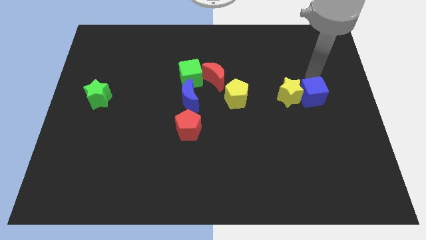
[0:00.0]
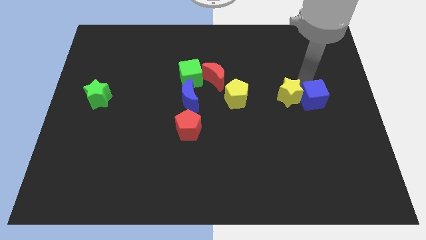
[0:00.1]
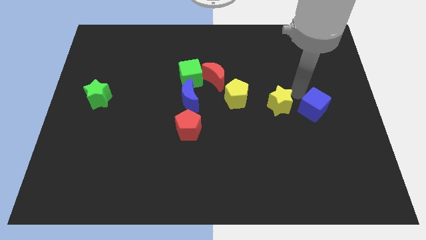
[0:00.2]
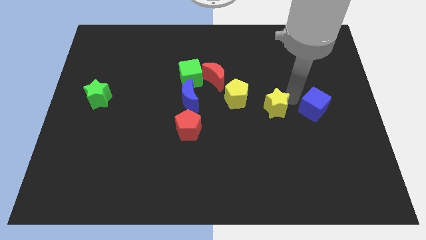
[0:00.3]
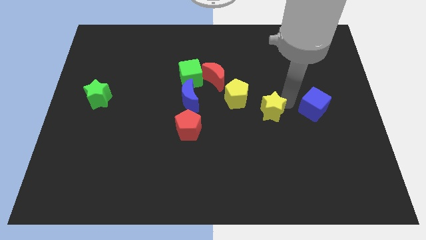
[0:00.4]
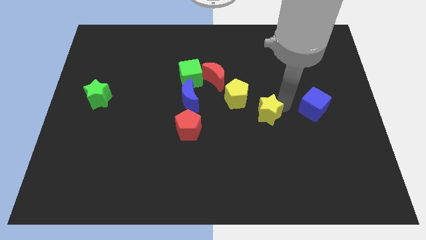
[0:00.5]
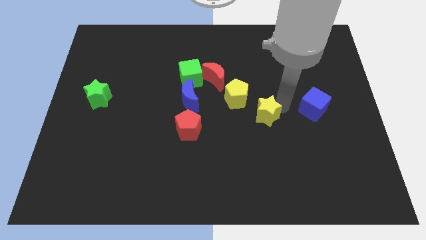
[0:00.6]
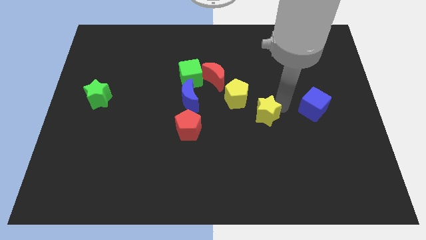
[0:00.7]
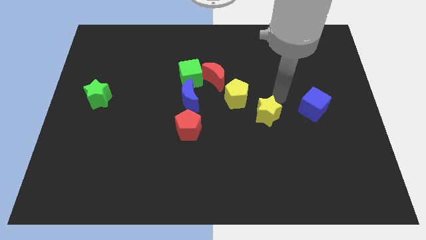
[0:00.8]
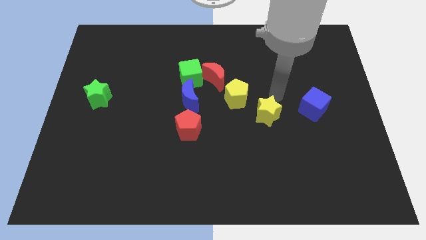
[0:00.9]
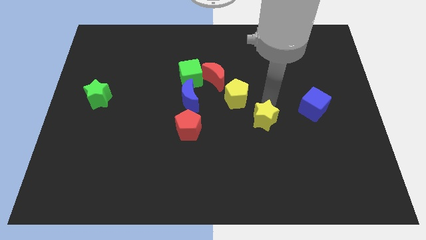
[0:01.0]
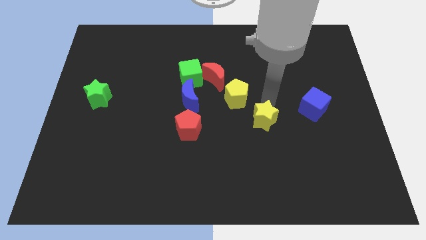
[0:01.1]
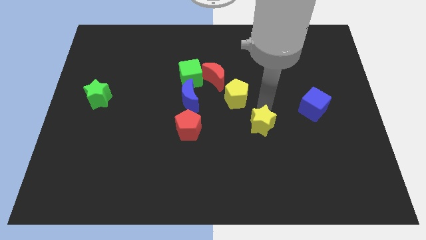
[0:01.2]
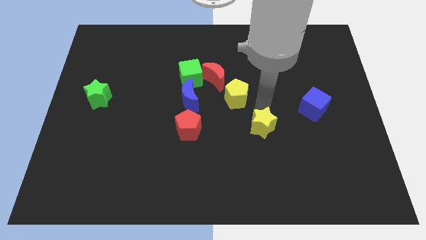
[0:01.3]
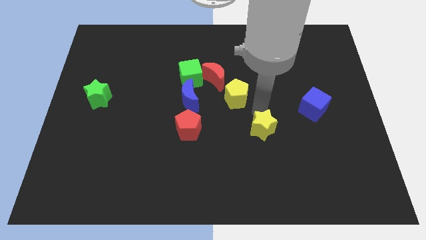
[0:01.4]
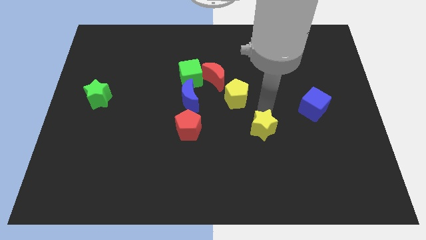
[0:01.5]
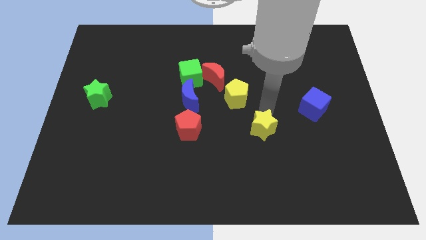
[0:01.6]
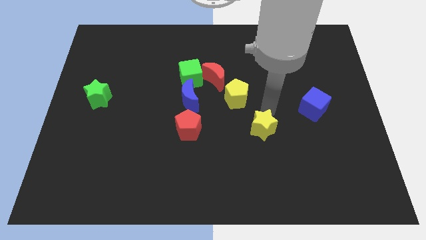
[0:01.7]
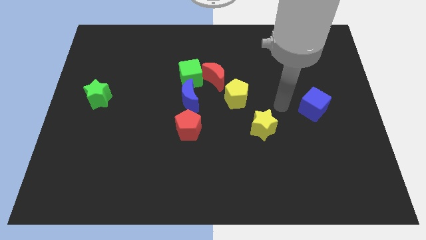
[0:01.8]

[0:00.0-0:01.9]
place yellow star diagonally to the yellow pentagon

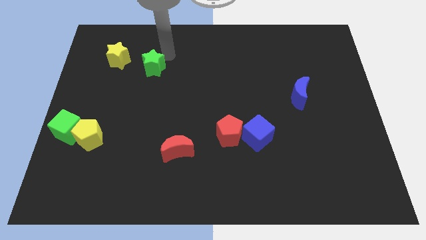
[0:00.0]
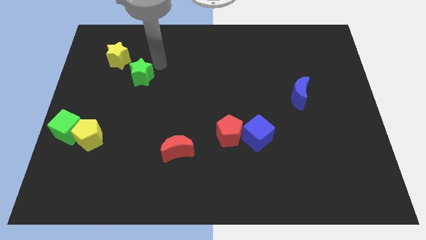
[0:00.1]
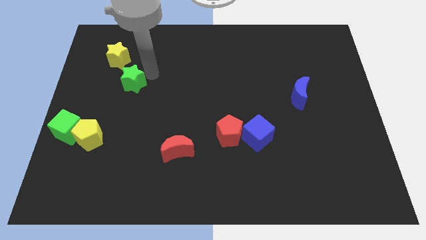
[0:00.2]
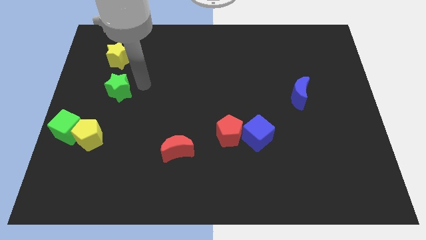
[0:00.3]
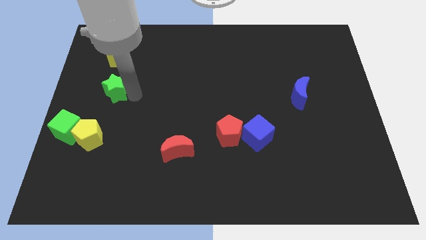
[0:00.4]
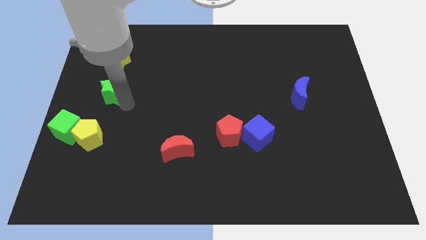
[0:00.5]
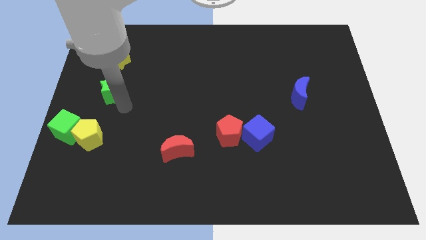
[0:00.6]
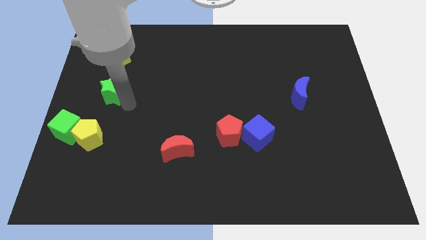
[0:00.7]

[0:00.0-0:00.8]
move the green star to the bottom of the board

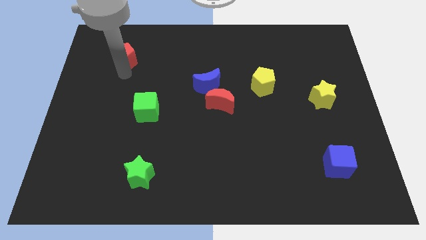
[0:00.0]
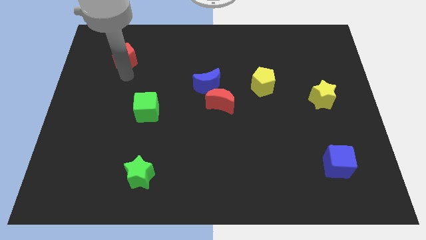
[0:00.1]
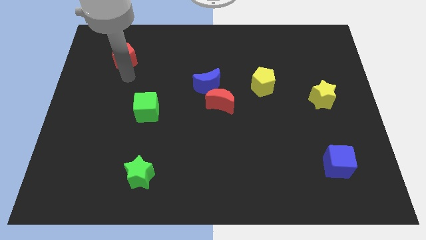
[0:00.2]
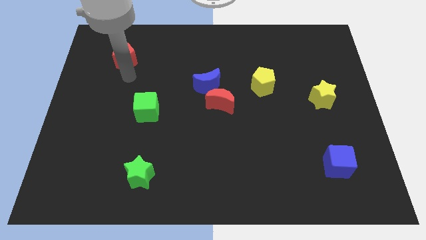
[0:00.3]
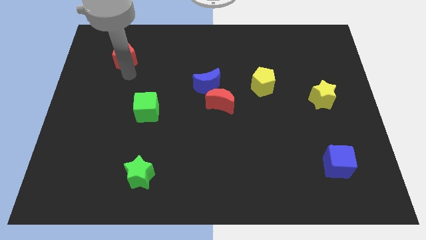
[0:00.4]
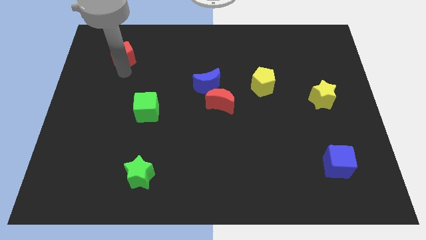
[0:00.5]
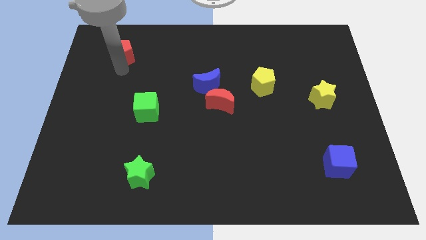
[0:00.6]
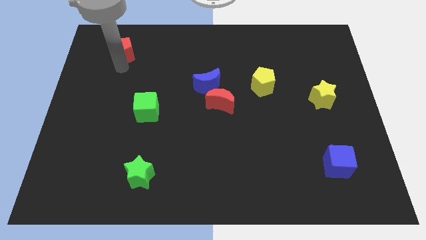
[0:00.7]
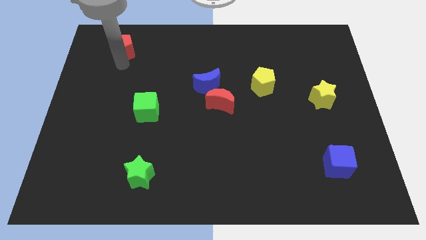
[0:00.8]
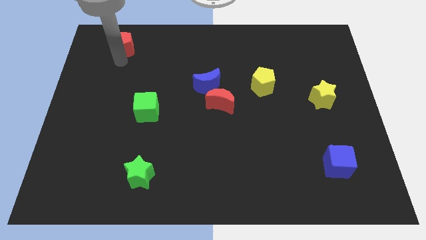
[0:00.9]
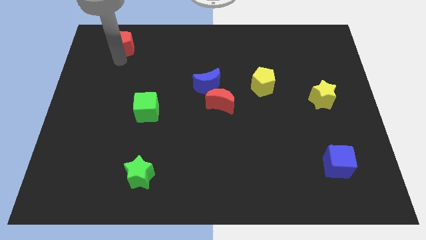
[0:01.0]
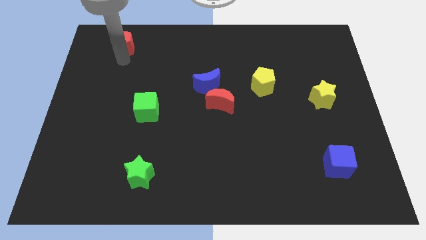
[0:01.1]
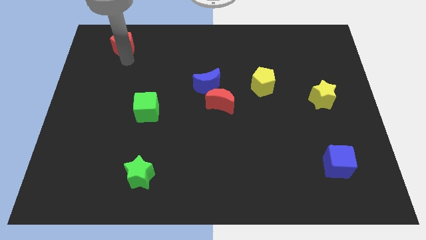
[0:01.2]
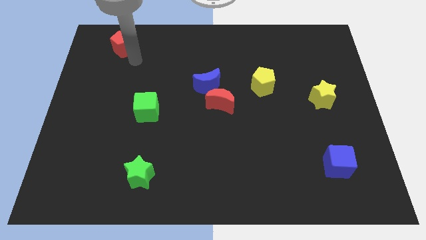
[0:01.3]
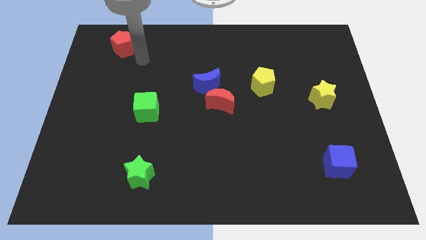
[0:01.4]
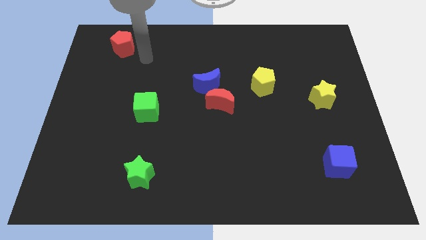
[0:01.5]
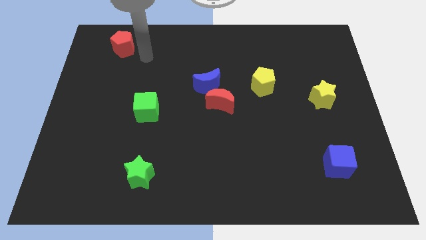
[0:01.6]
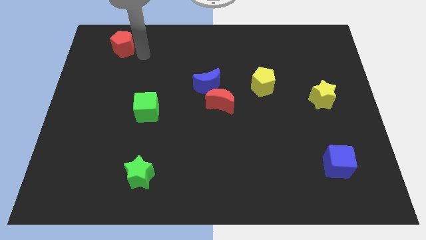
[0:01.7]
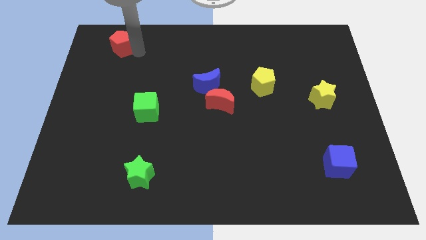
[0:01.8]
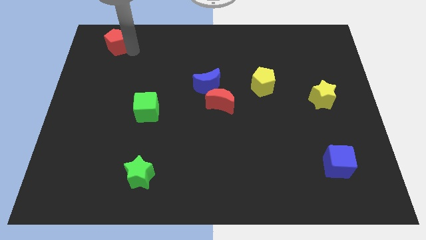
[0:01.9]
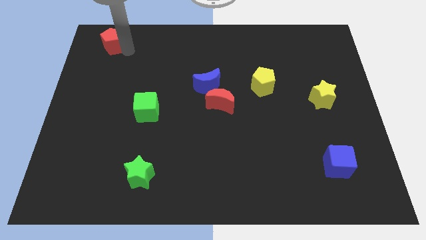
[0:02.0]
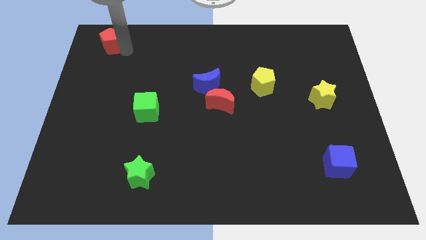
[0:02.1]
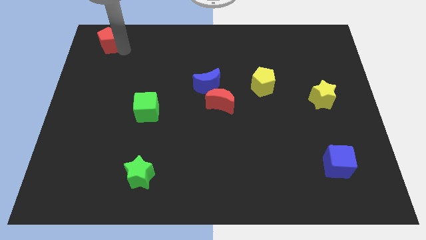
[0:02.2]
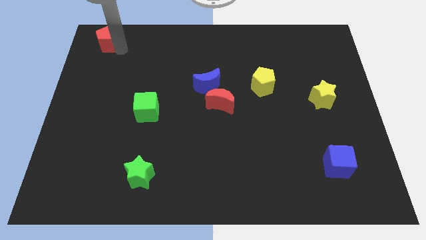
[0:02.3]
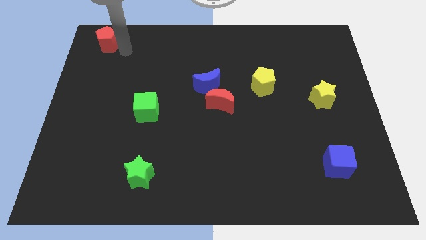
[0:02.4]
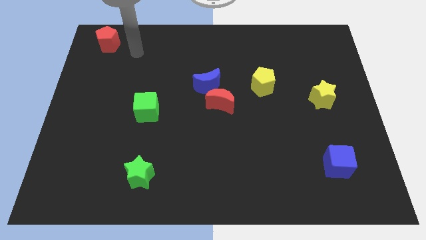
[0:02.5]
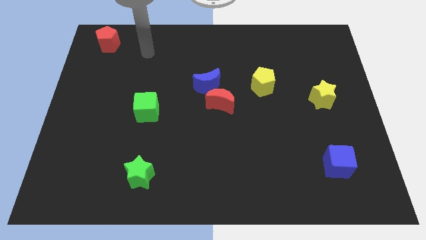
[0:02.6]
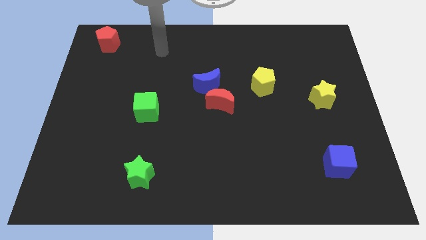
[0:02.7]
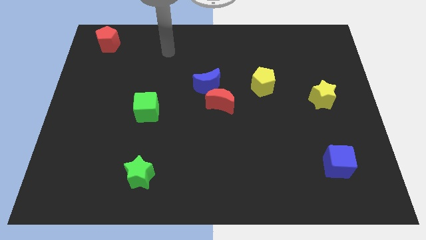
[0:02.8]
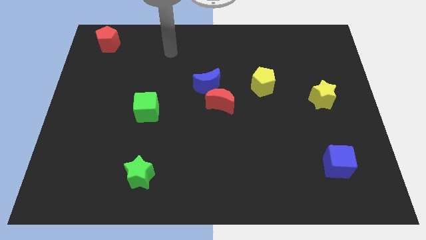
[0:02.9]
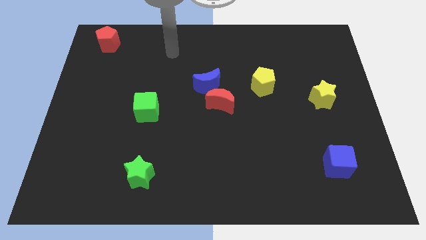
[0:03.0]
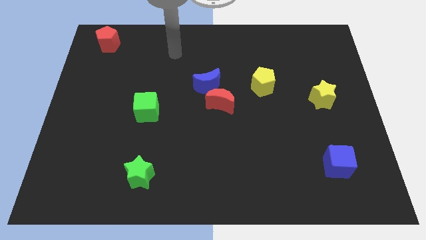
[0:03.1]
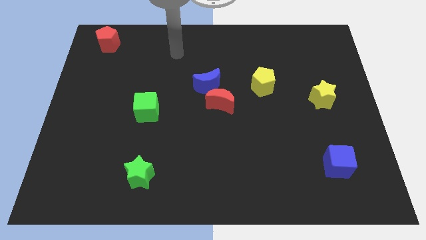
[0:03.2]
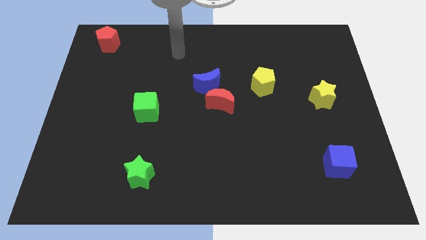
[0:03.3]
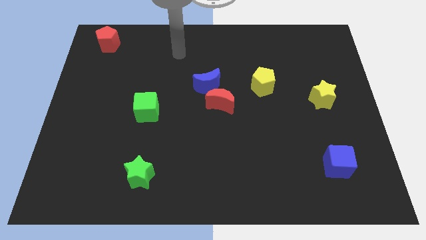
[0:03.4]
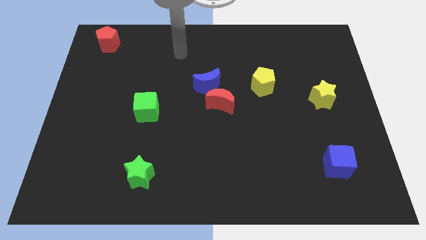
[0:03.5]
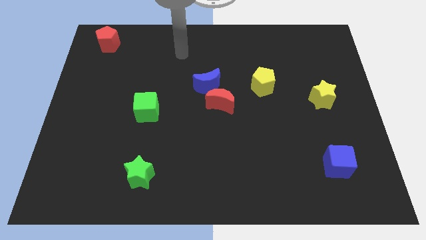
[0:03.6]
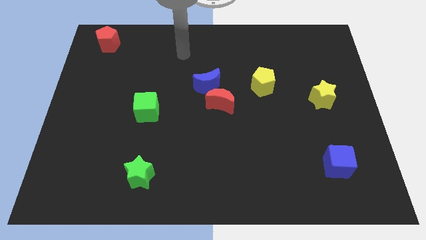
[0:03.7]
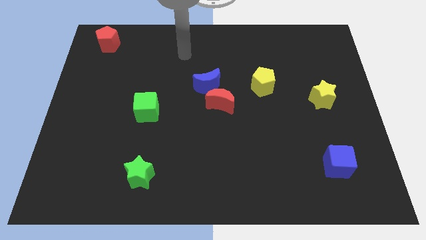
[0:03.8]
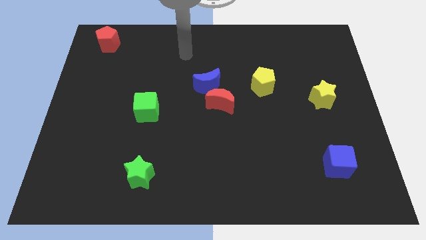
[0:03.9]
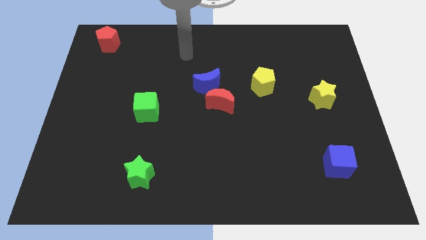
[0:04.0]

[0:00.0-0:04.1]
push red pentagon to the top left

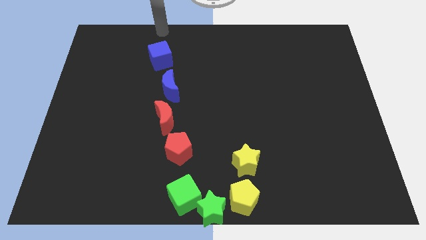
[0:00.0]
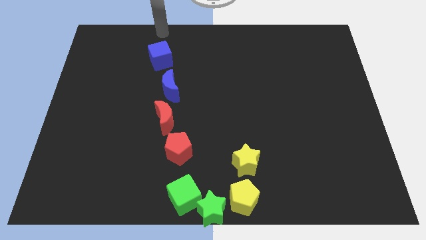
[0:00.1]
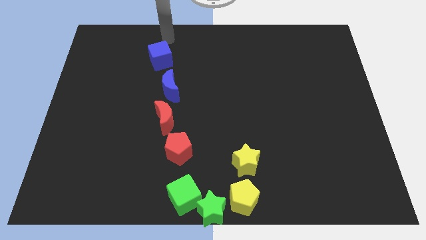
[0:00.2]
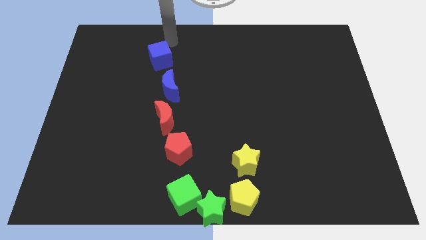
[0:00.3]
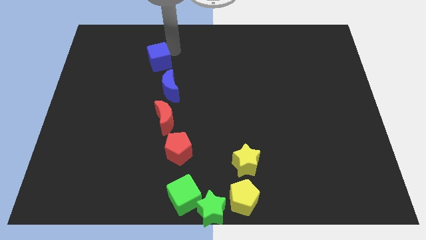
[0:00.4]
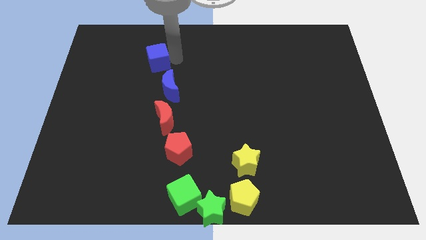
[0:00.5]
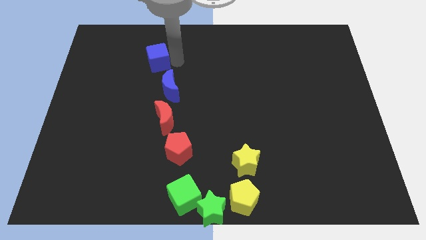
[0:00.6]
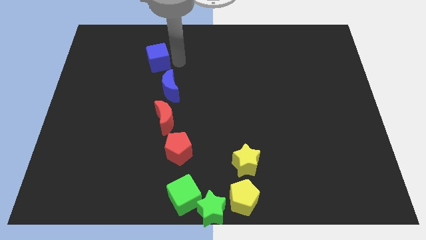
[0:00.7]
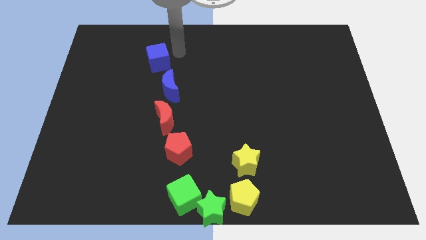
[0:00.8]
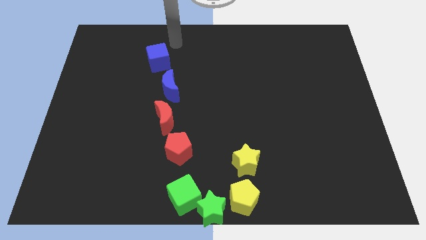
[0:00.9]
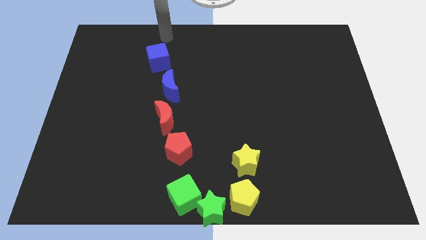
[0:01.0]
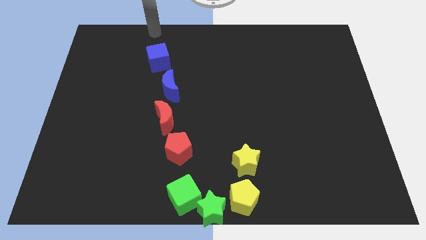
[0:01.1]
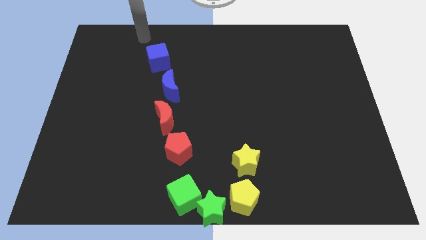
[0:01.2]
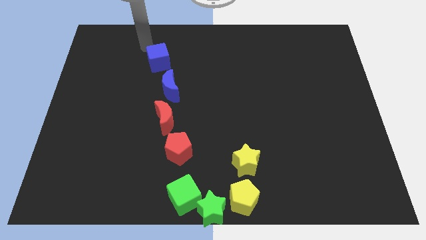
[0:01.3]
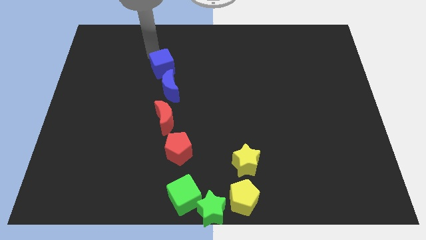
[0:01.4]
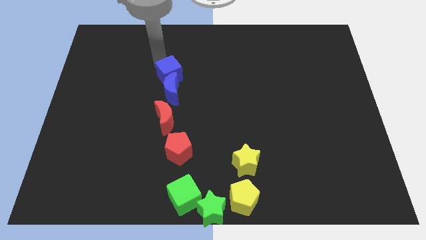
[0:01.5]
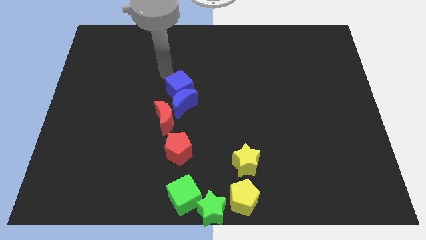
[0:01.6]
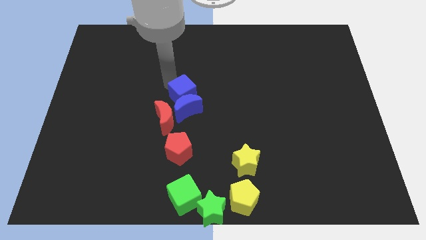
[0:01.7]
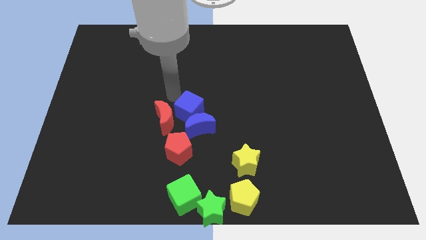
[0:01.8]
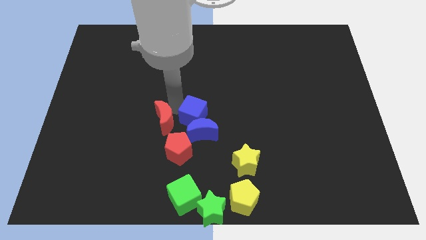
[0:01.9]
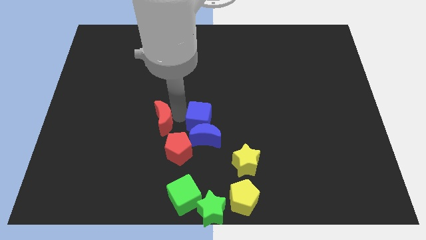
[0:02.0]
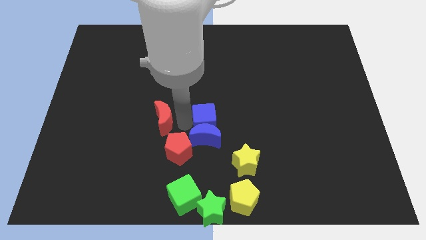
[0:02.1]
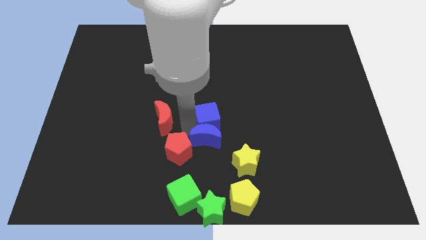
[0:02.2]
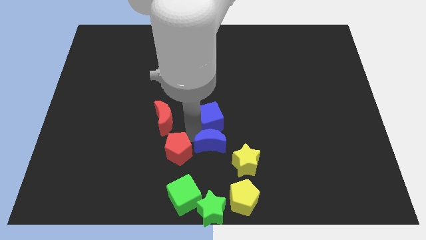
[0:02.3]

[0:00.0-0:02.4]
push the blue blocks right to the red blocks
